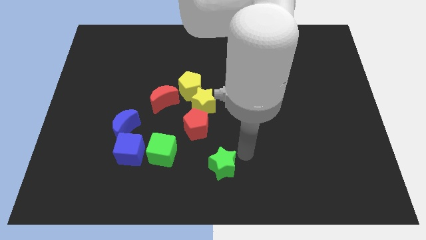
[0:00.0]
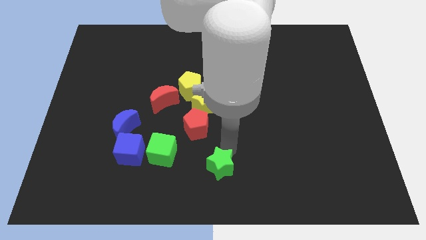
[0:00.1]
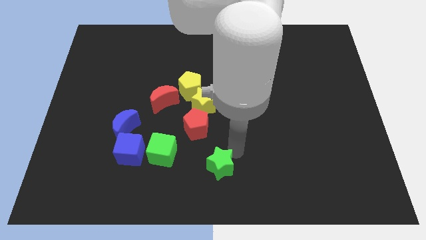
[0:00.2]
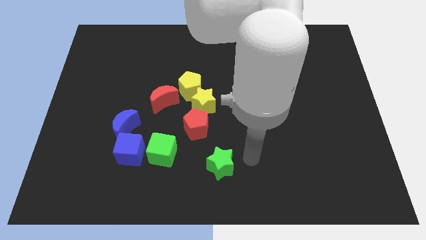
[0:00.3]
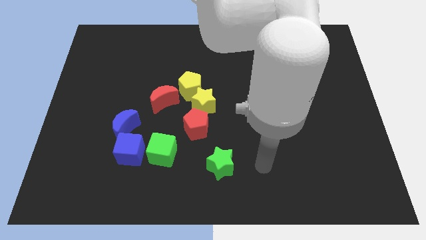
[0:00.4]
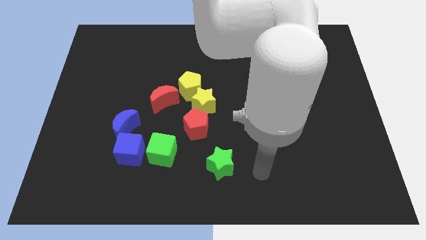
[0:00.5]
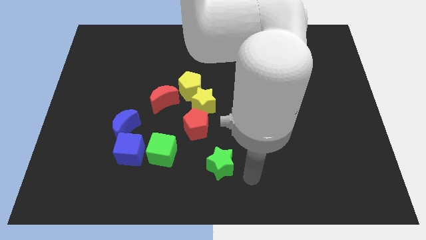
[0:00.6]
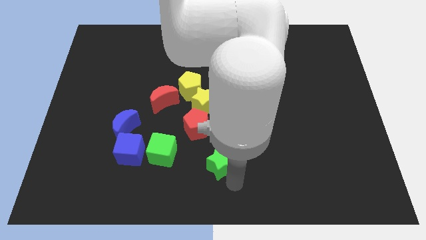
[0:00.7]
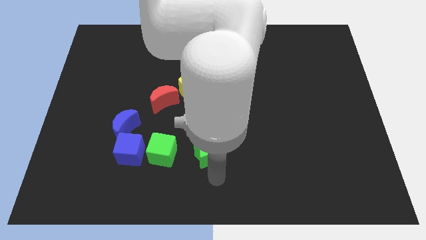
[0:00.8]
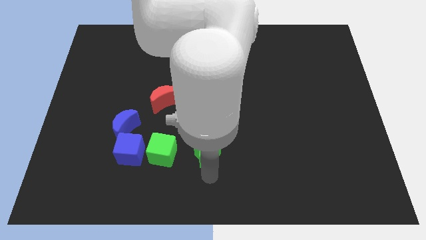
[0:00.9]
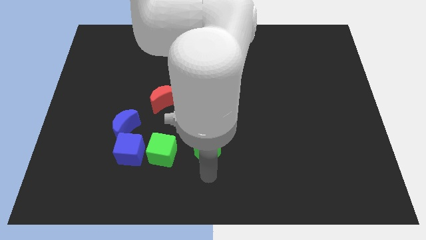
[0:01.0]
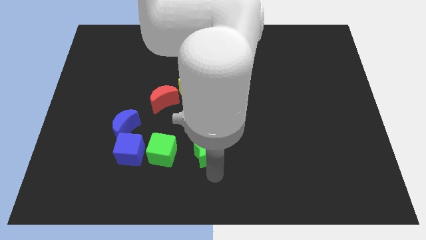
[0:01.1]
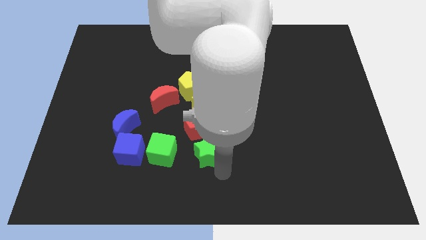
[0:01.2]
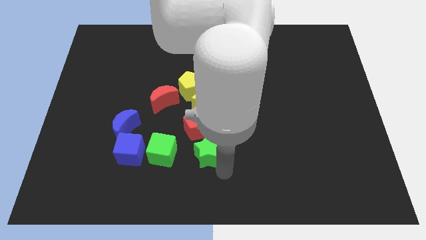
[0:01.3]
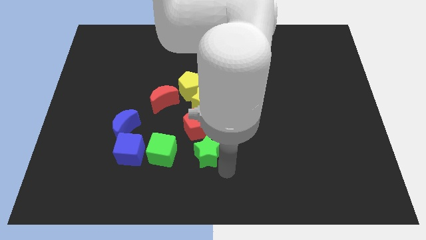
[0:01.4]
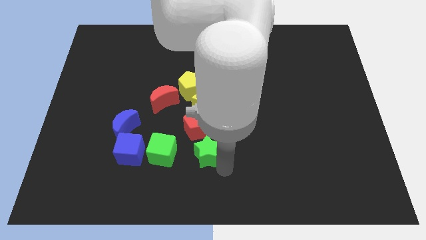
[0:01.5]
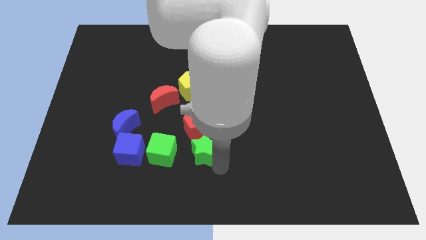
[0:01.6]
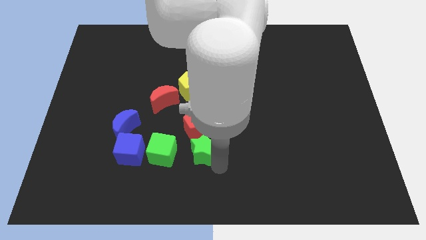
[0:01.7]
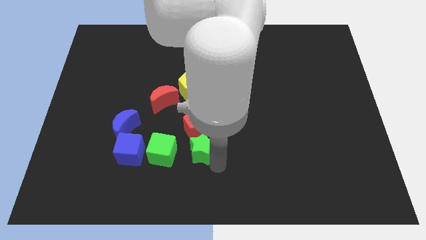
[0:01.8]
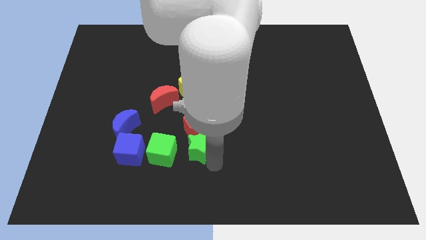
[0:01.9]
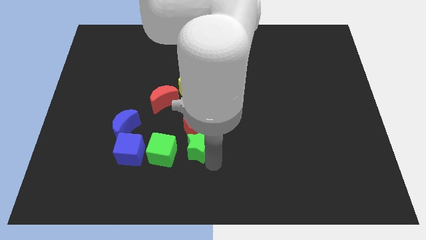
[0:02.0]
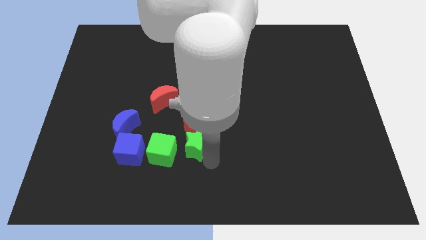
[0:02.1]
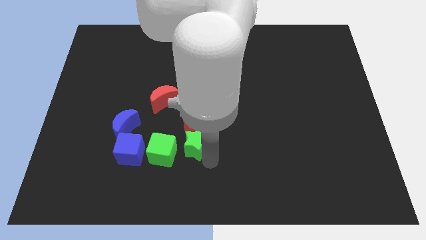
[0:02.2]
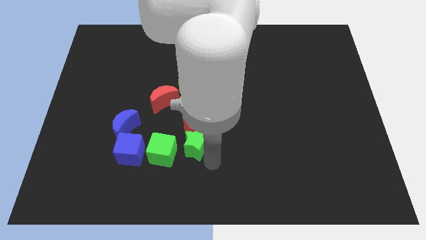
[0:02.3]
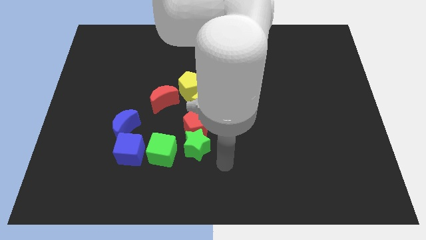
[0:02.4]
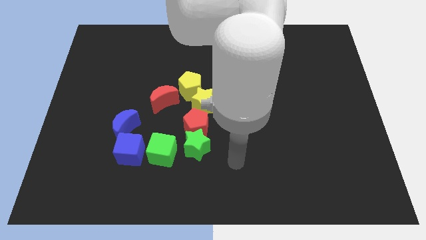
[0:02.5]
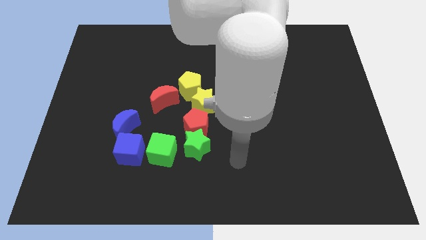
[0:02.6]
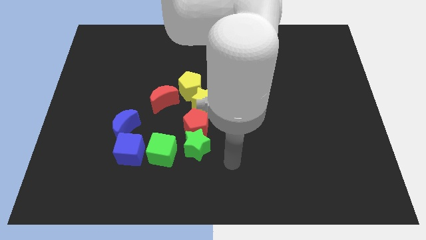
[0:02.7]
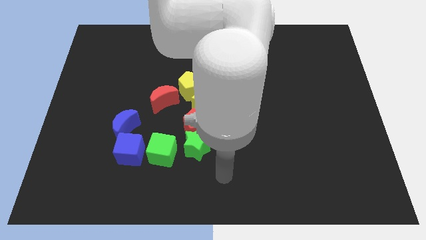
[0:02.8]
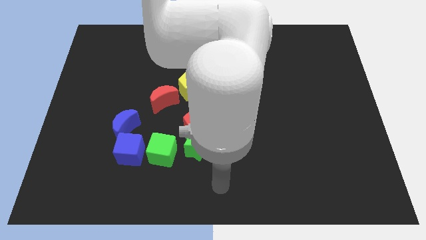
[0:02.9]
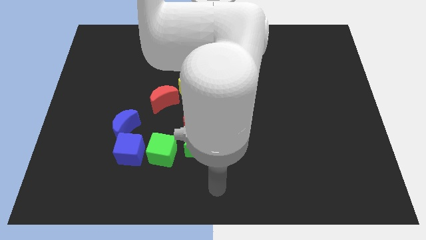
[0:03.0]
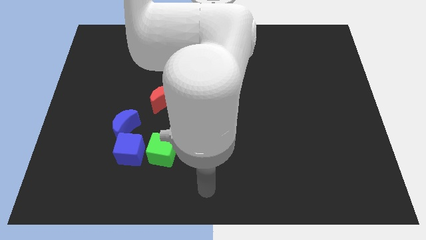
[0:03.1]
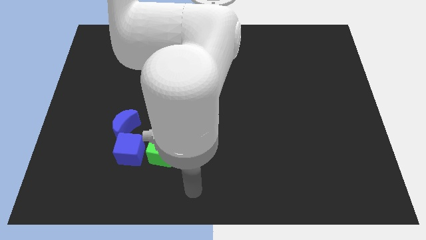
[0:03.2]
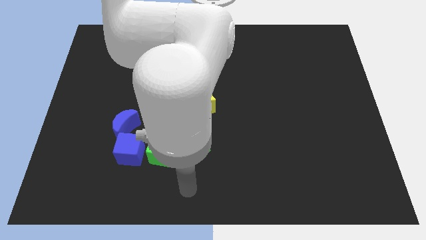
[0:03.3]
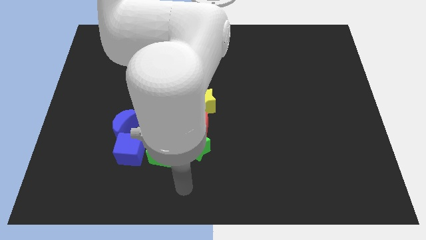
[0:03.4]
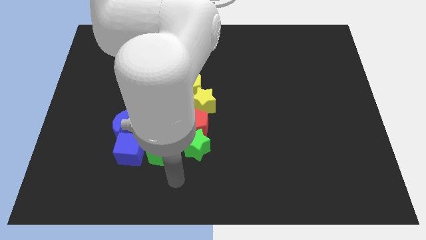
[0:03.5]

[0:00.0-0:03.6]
put the green star to the right side of the green cube

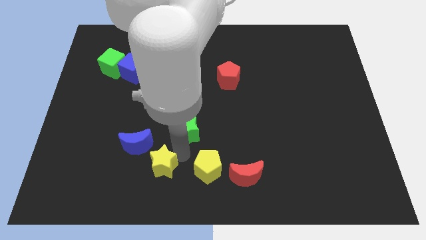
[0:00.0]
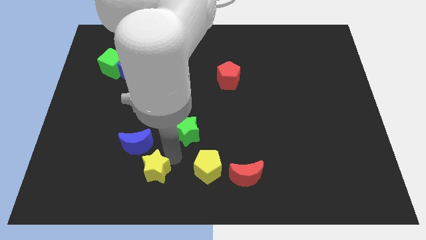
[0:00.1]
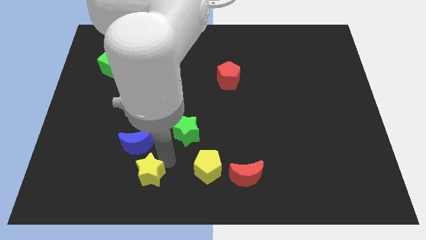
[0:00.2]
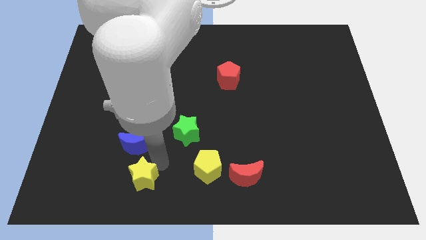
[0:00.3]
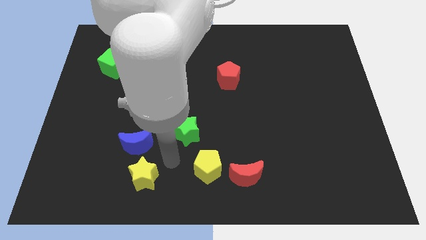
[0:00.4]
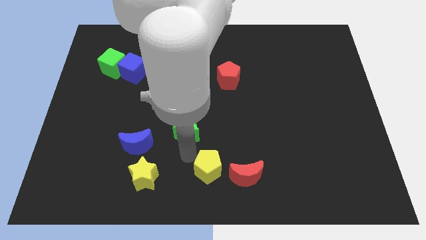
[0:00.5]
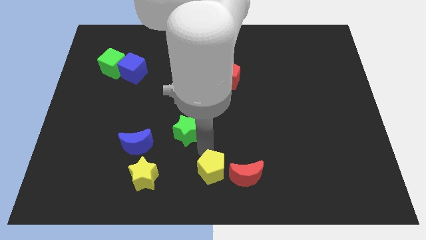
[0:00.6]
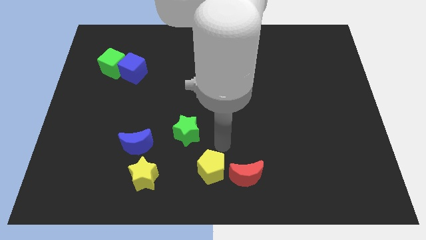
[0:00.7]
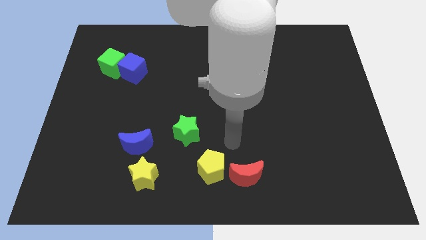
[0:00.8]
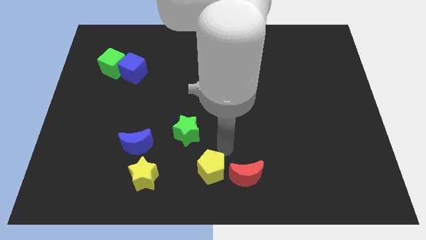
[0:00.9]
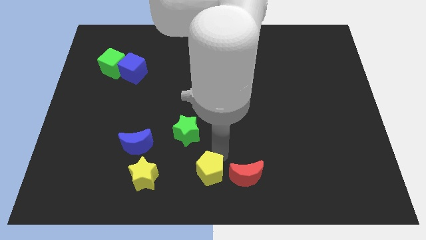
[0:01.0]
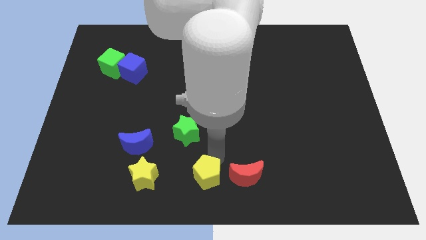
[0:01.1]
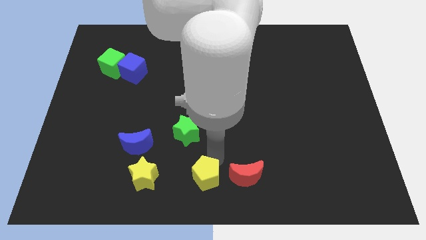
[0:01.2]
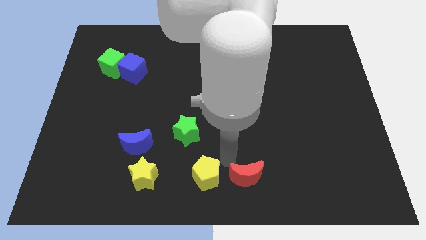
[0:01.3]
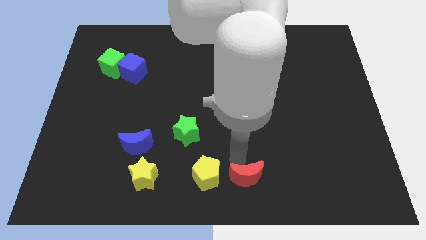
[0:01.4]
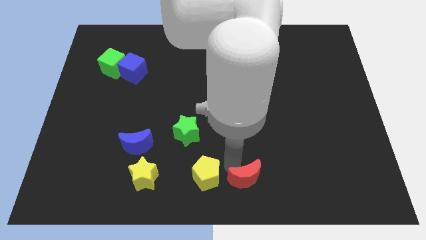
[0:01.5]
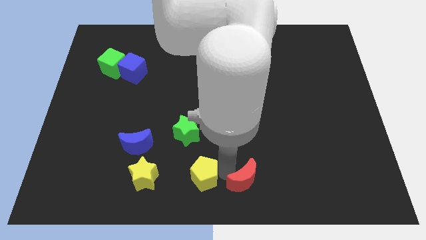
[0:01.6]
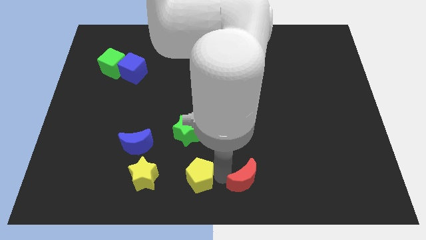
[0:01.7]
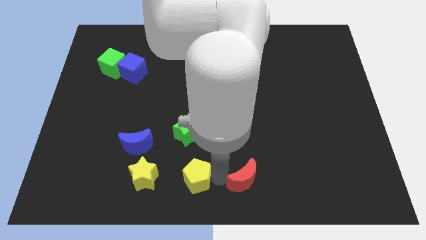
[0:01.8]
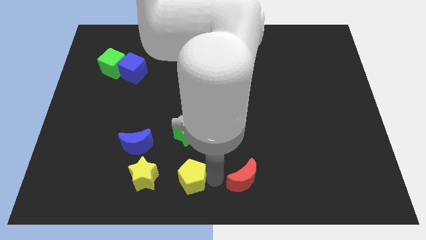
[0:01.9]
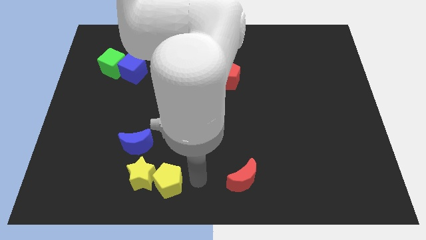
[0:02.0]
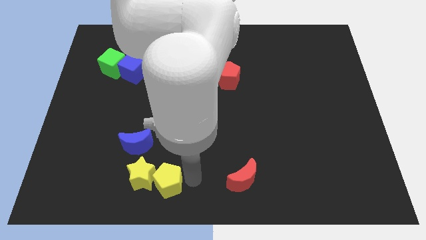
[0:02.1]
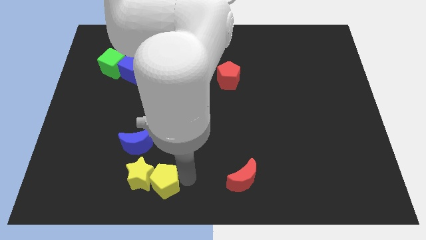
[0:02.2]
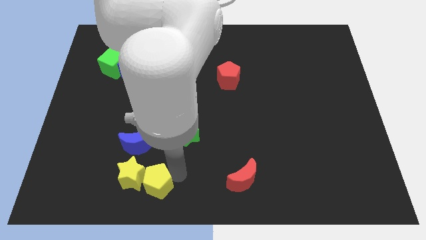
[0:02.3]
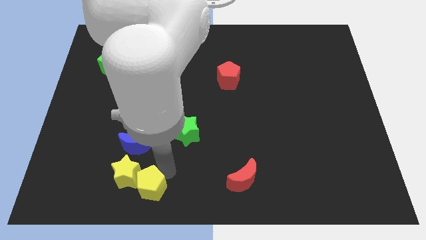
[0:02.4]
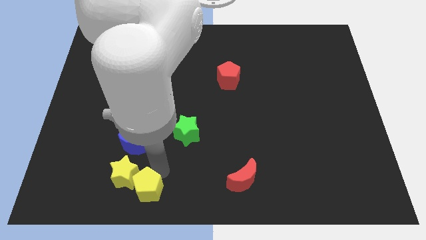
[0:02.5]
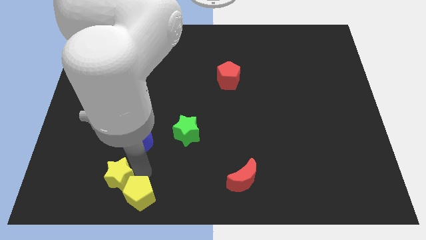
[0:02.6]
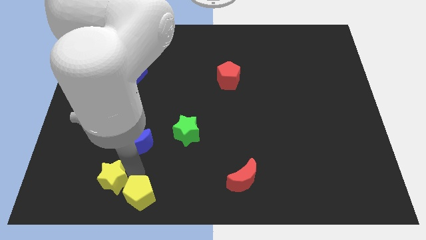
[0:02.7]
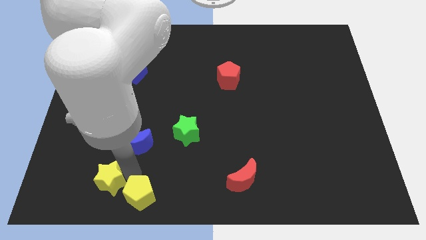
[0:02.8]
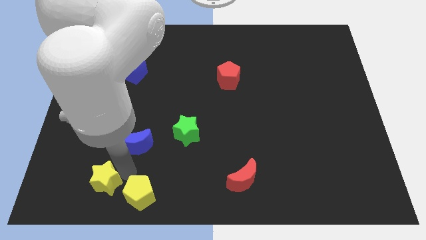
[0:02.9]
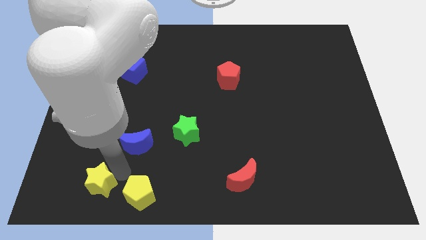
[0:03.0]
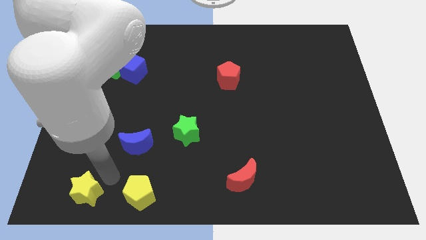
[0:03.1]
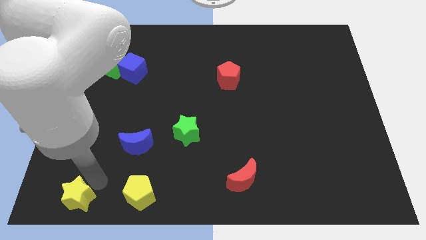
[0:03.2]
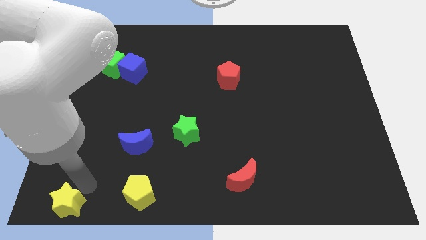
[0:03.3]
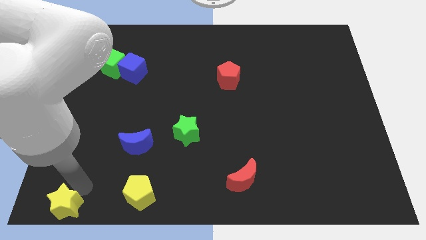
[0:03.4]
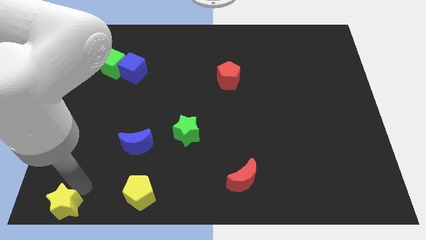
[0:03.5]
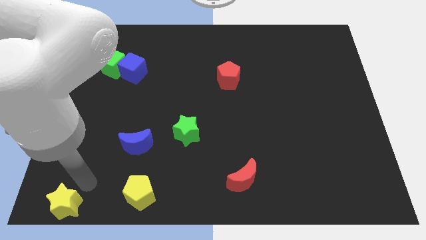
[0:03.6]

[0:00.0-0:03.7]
push the yellow pentagon into the yellow star

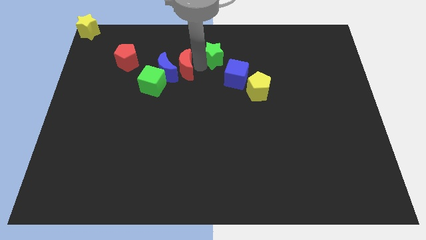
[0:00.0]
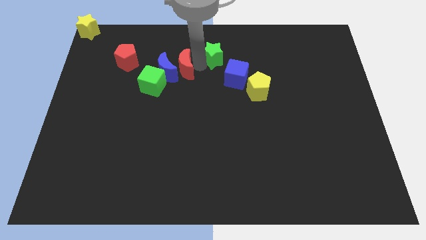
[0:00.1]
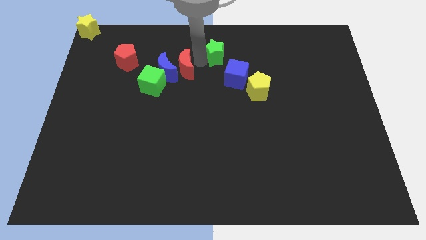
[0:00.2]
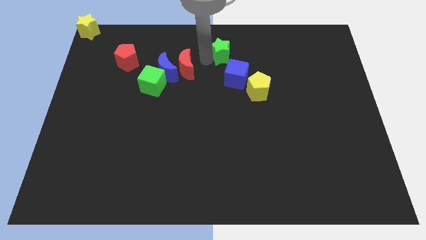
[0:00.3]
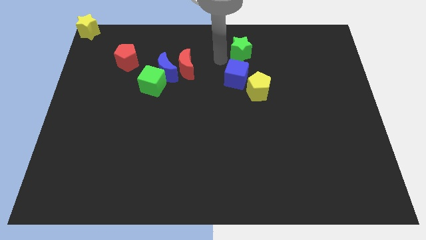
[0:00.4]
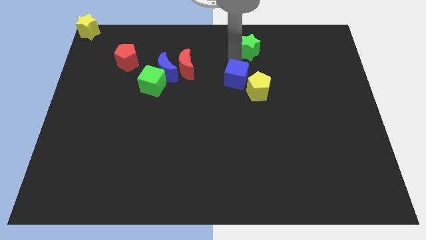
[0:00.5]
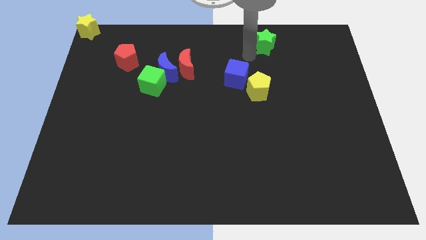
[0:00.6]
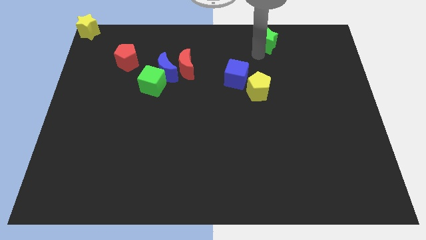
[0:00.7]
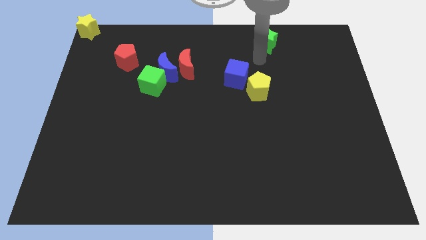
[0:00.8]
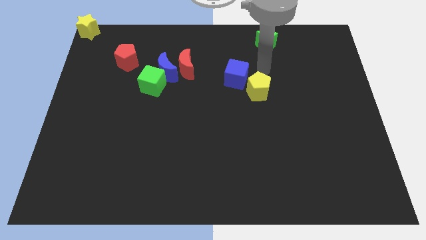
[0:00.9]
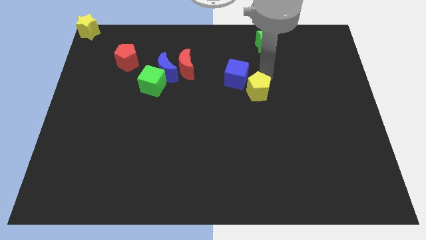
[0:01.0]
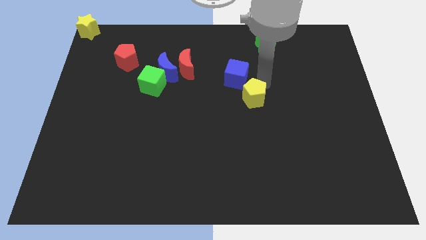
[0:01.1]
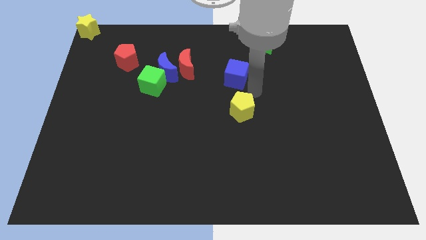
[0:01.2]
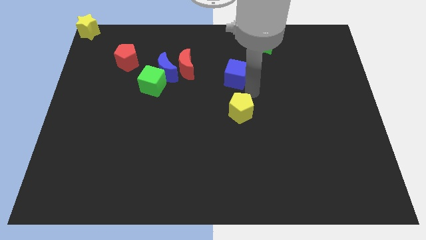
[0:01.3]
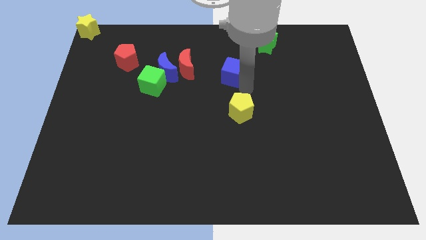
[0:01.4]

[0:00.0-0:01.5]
move the green star diagonal to the yellow pentagon

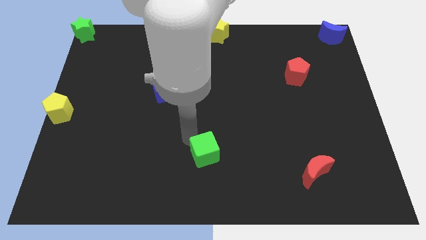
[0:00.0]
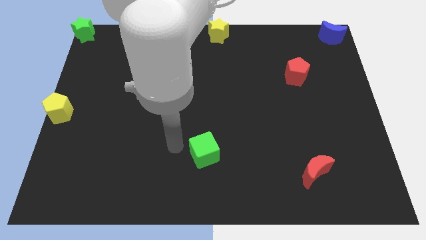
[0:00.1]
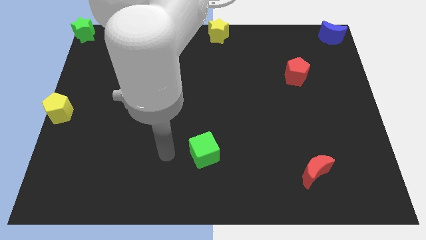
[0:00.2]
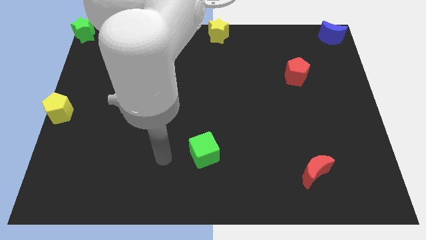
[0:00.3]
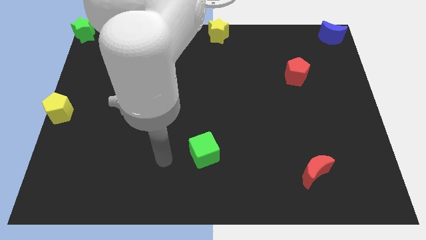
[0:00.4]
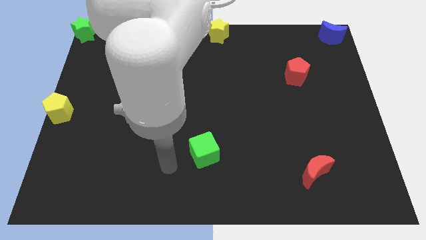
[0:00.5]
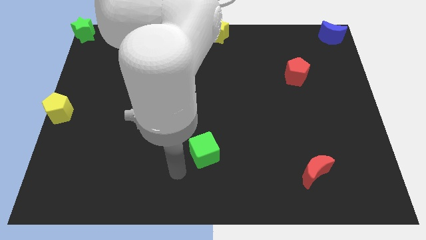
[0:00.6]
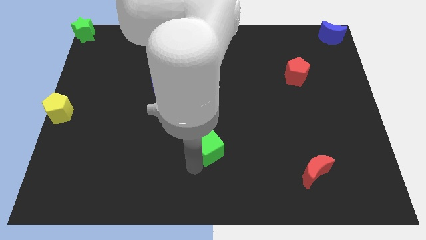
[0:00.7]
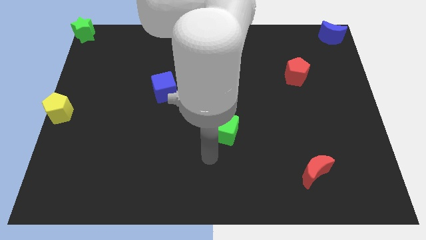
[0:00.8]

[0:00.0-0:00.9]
push the green cube towards the red pentagon
